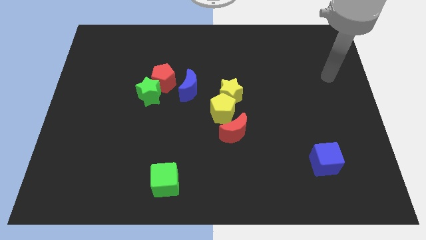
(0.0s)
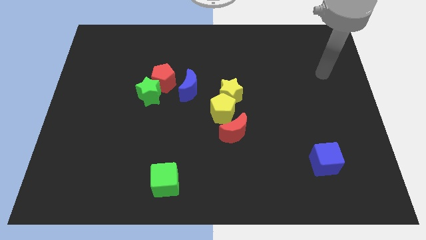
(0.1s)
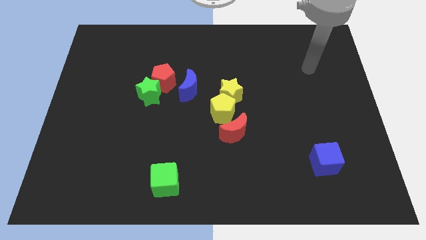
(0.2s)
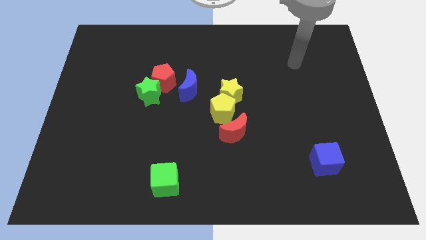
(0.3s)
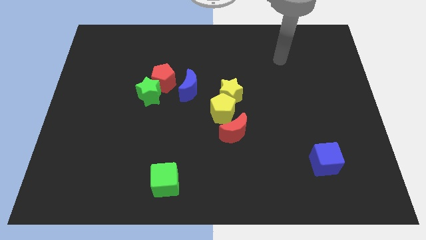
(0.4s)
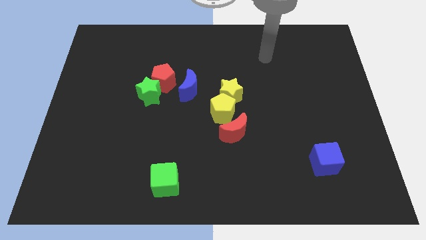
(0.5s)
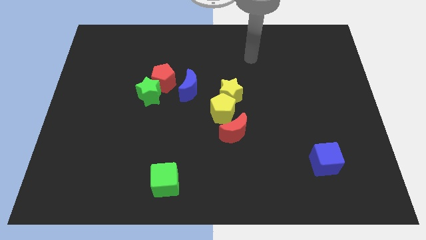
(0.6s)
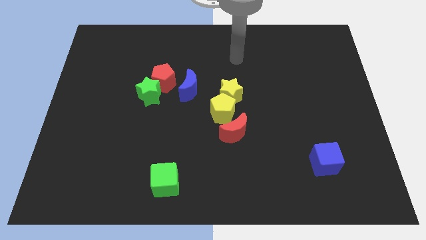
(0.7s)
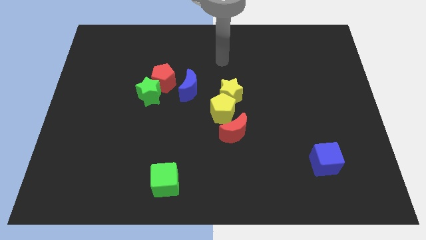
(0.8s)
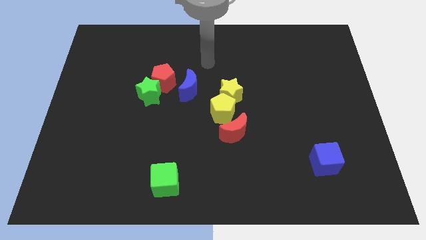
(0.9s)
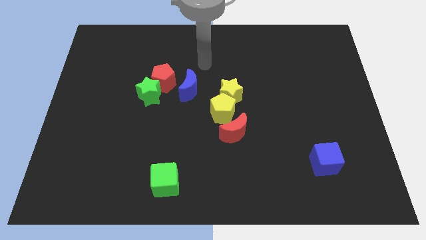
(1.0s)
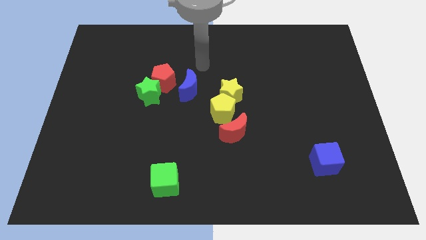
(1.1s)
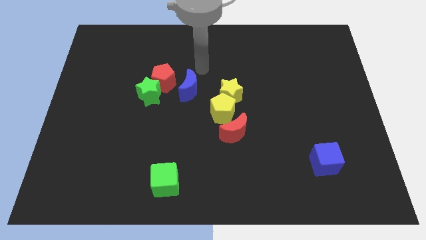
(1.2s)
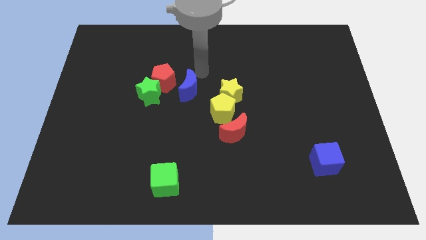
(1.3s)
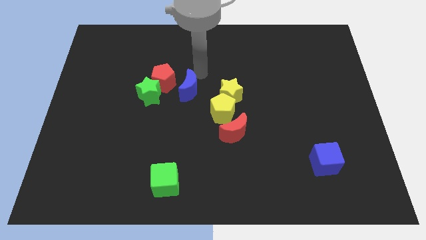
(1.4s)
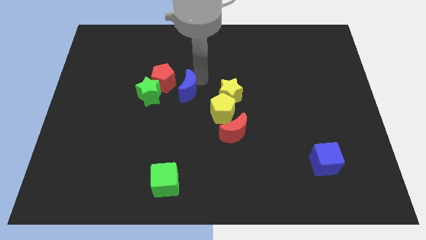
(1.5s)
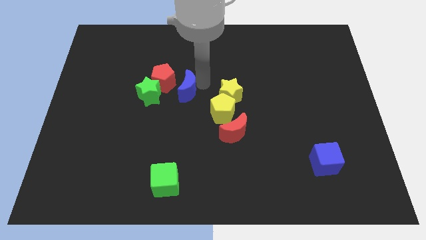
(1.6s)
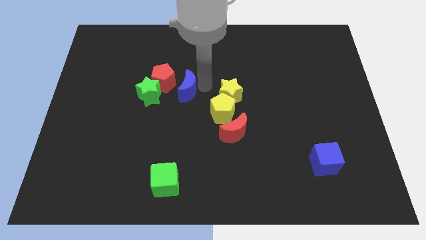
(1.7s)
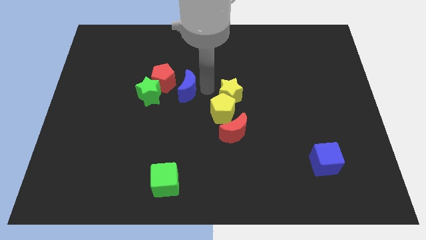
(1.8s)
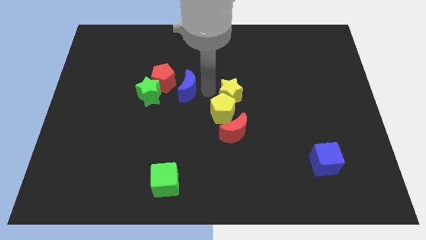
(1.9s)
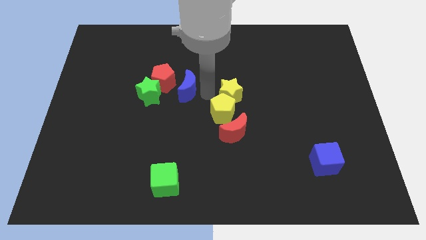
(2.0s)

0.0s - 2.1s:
place the arm on the top left of the yellow pentagon

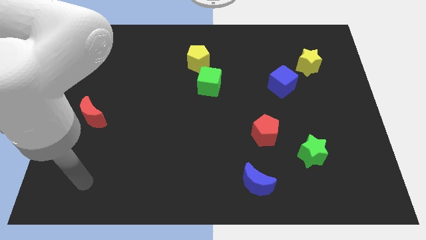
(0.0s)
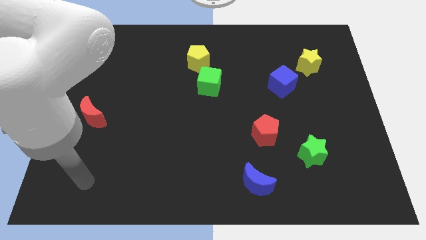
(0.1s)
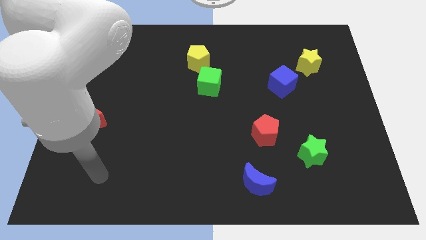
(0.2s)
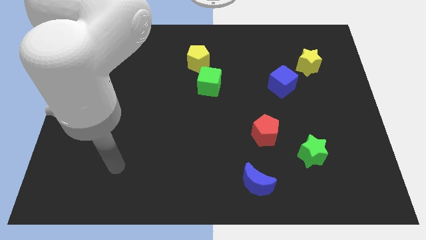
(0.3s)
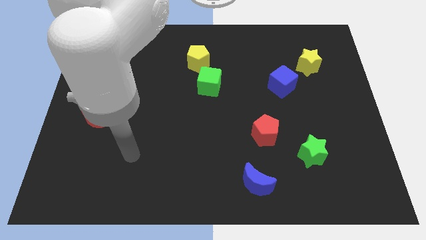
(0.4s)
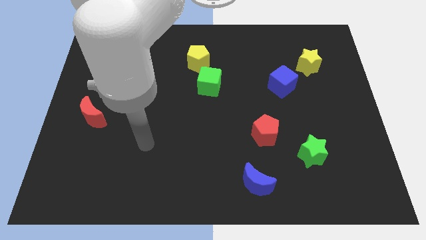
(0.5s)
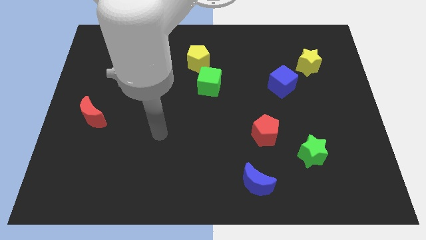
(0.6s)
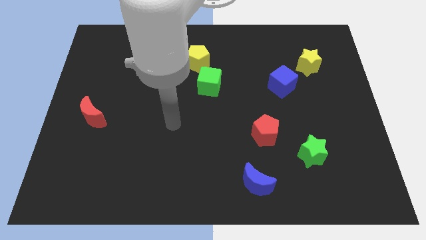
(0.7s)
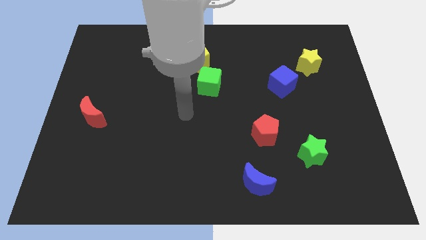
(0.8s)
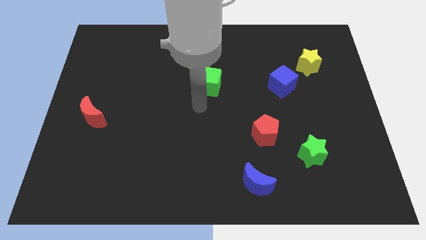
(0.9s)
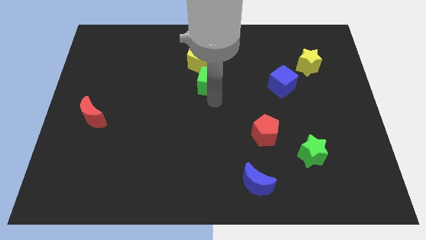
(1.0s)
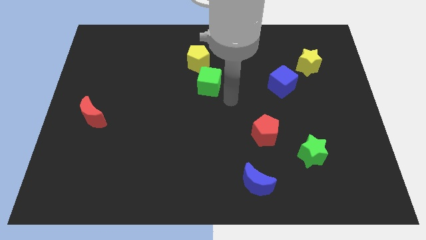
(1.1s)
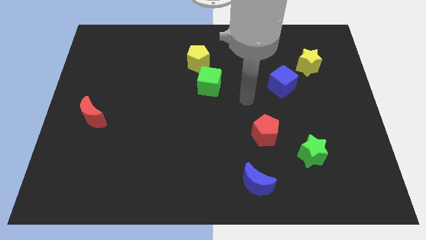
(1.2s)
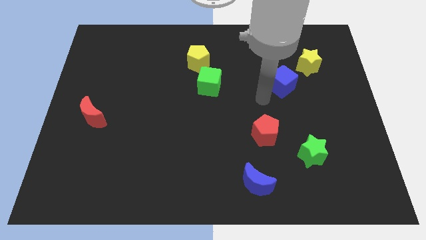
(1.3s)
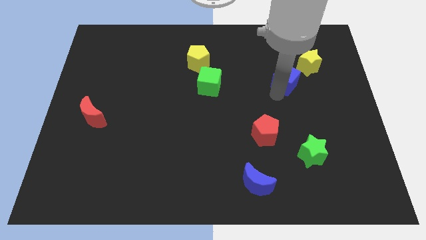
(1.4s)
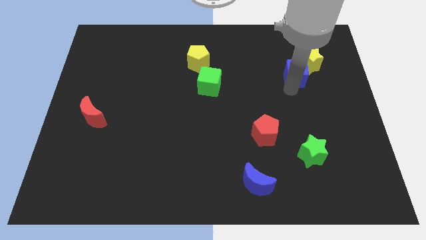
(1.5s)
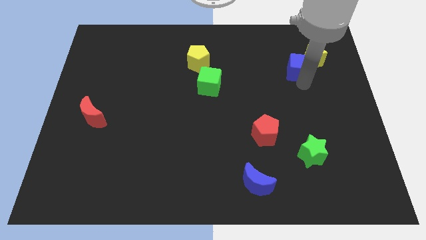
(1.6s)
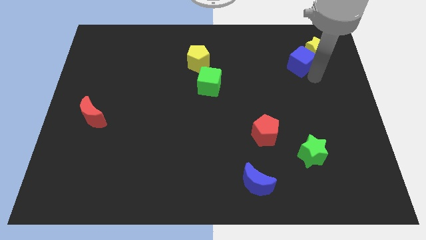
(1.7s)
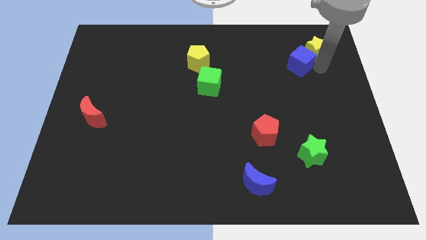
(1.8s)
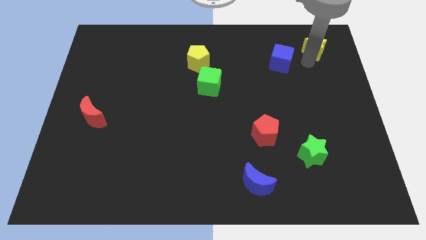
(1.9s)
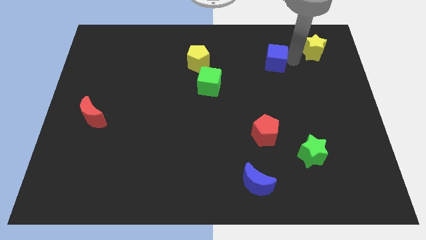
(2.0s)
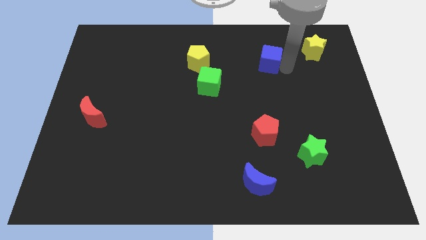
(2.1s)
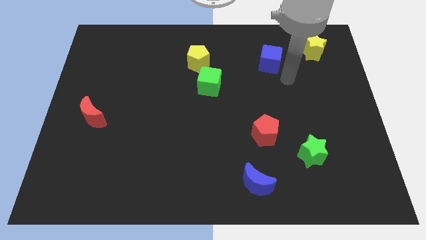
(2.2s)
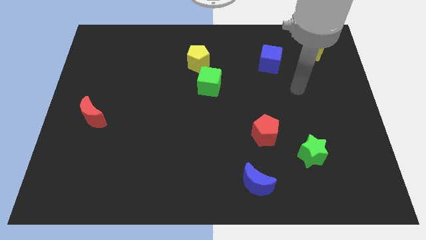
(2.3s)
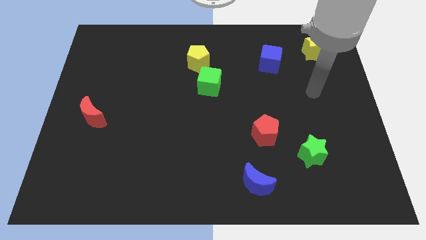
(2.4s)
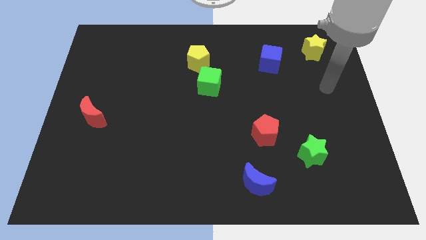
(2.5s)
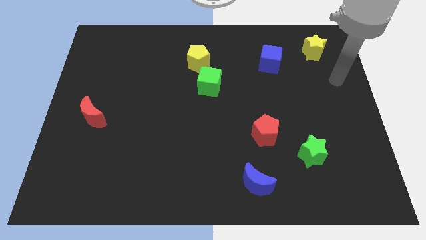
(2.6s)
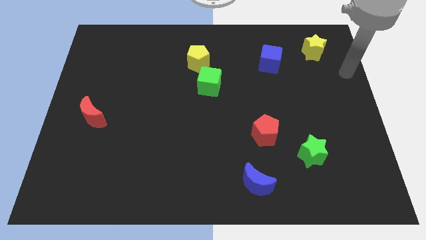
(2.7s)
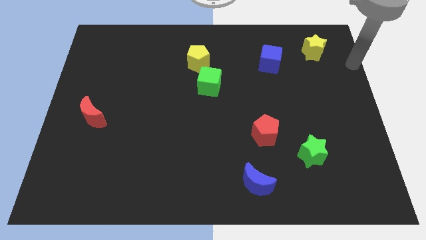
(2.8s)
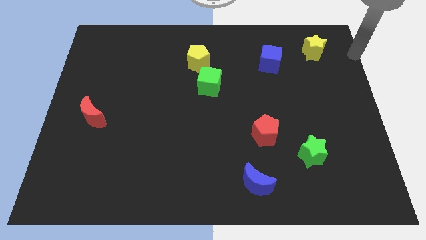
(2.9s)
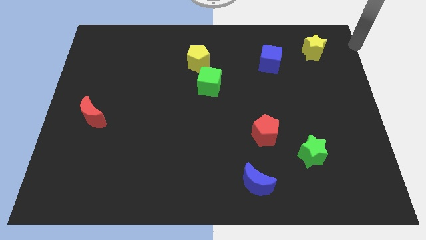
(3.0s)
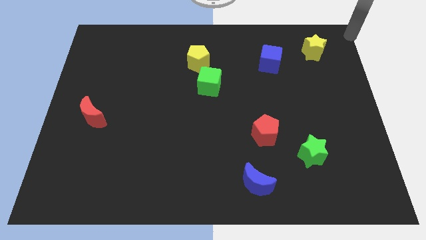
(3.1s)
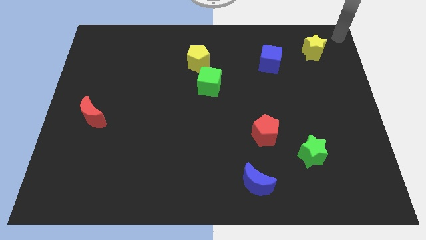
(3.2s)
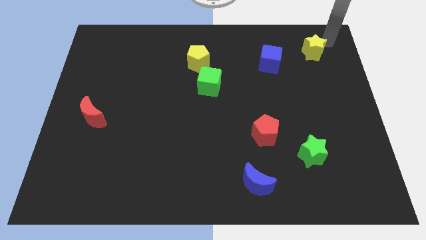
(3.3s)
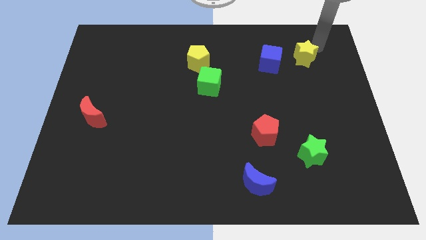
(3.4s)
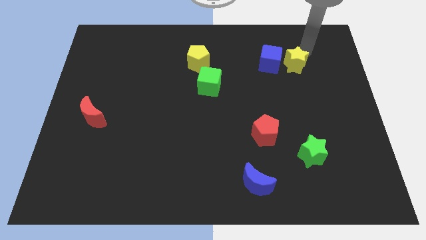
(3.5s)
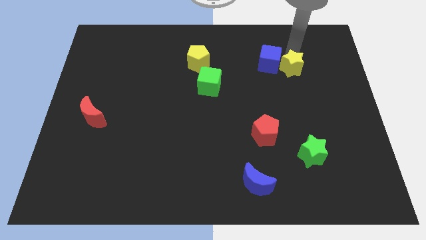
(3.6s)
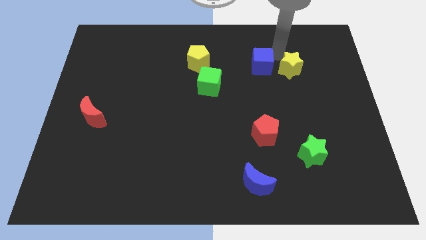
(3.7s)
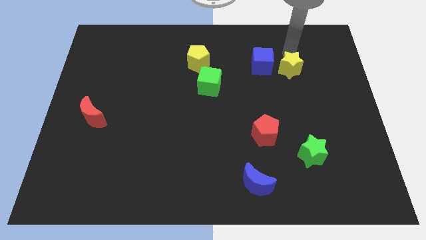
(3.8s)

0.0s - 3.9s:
place the blue cube and the yellow star in a horizontal line

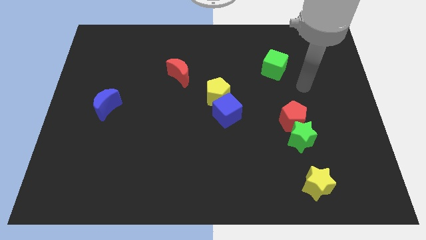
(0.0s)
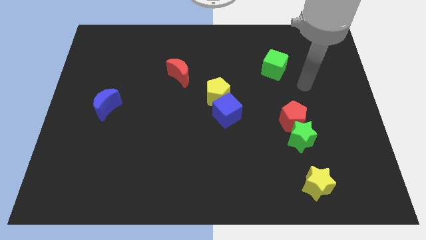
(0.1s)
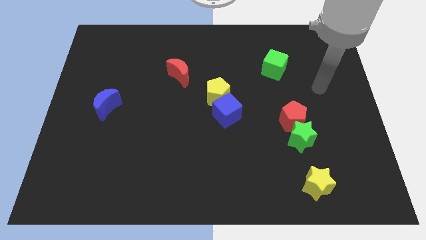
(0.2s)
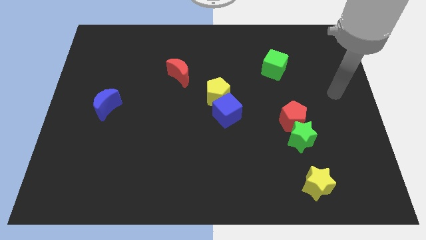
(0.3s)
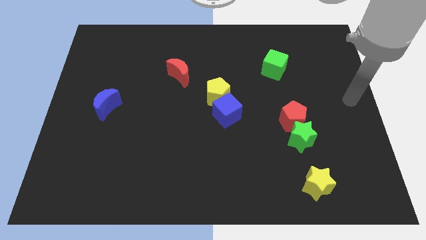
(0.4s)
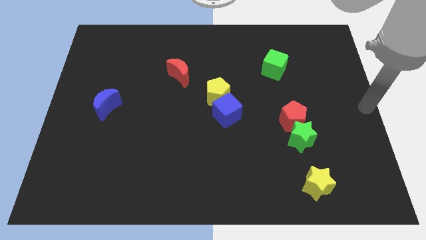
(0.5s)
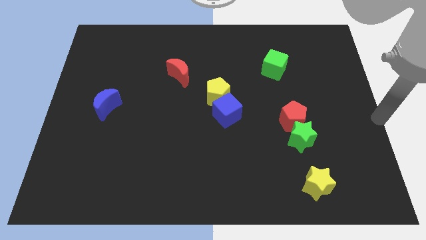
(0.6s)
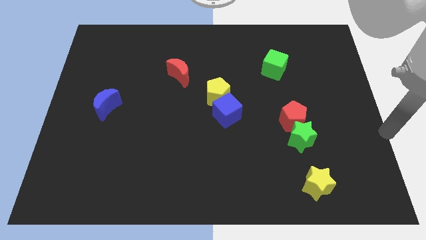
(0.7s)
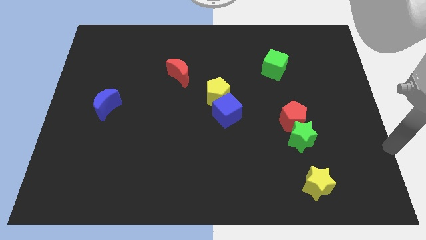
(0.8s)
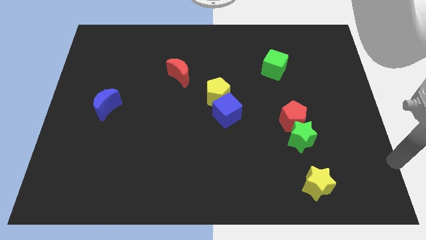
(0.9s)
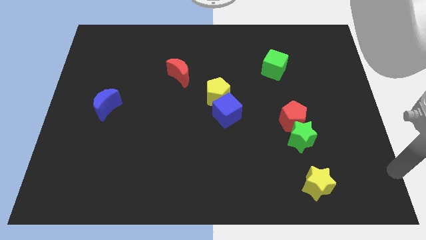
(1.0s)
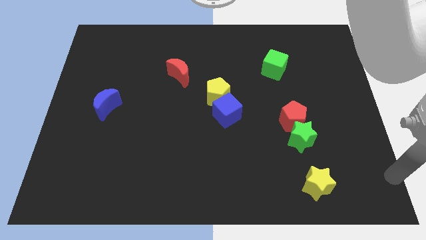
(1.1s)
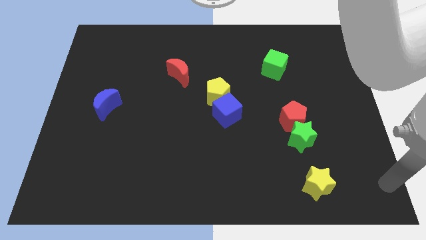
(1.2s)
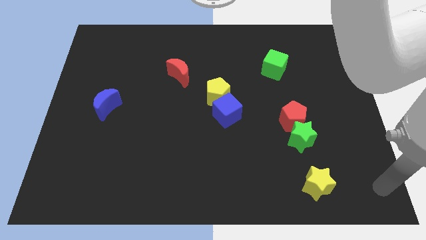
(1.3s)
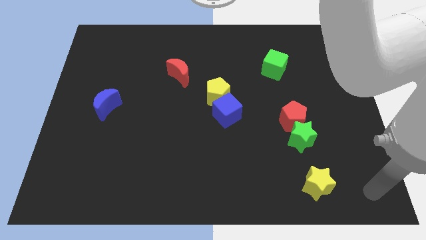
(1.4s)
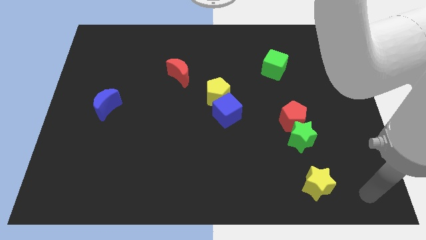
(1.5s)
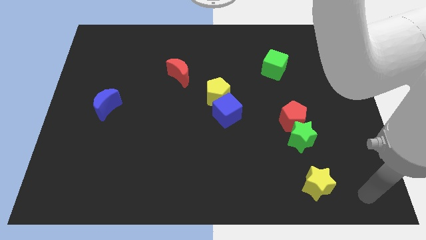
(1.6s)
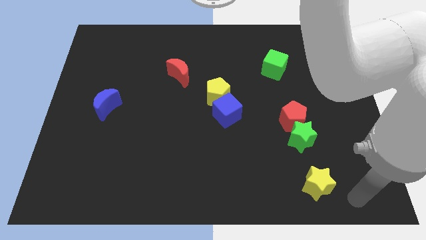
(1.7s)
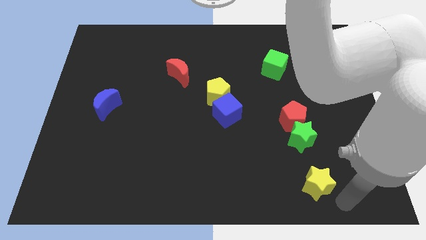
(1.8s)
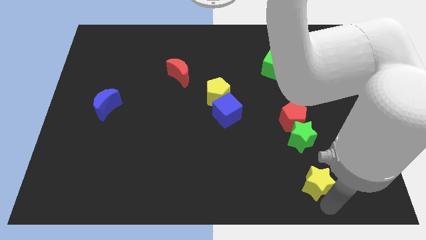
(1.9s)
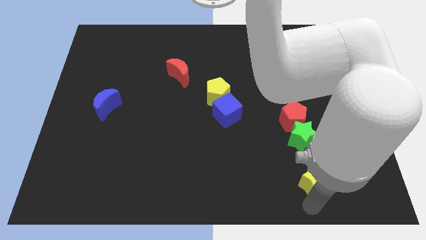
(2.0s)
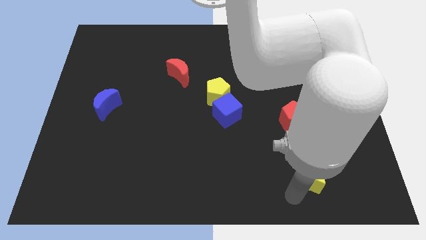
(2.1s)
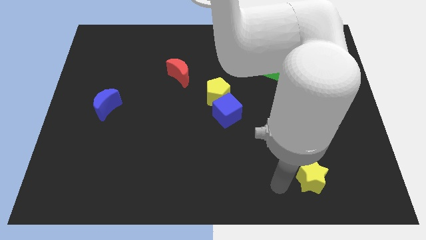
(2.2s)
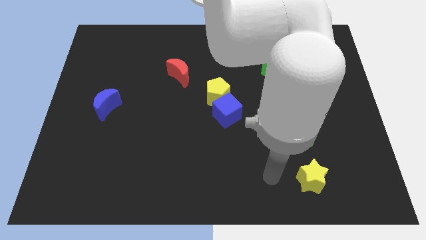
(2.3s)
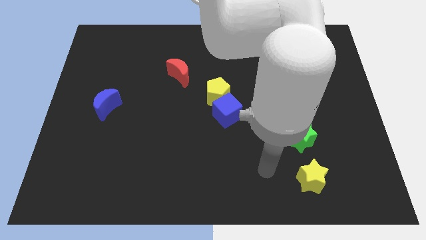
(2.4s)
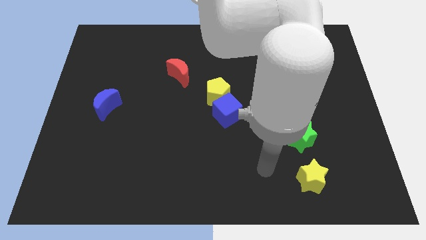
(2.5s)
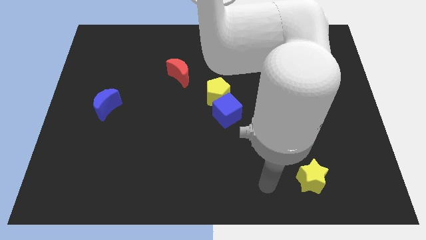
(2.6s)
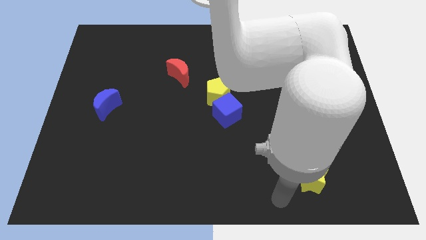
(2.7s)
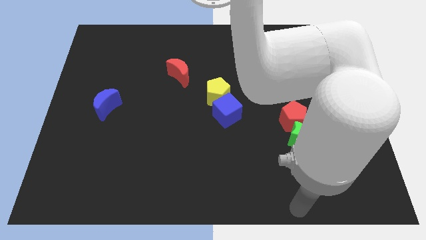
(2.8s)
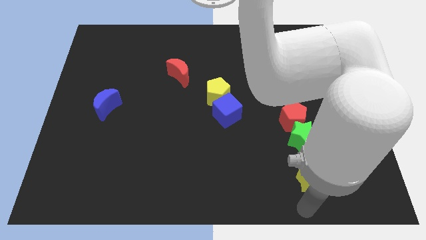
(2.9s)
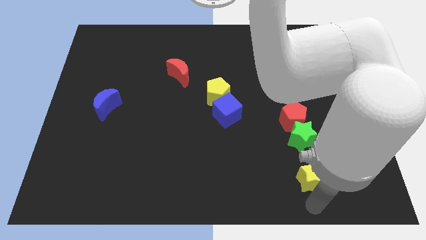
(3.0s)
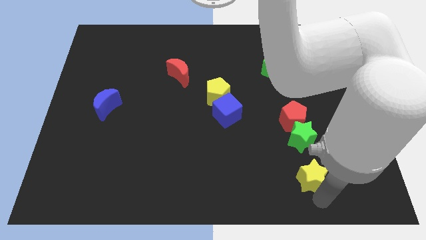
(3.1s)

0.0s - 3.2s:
touch the bottom side of the yellow star
